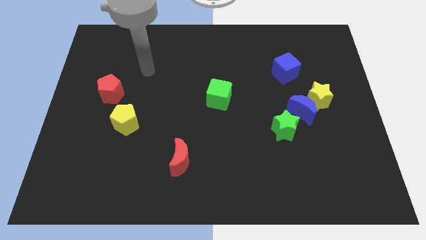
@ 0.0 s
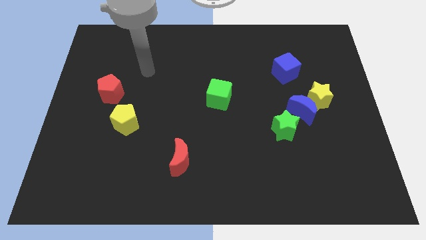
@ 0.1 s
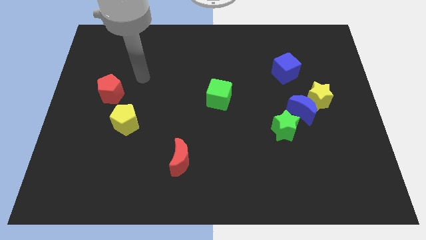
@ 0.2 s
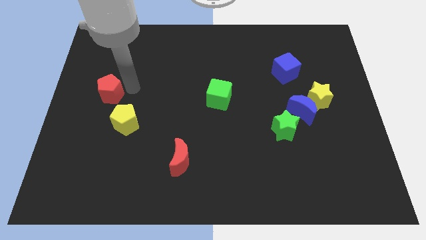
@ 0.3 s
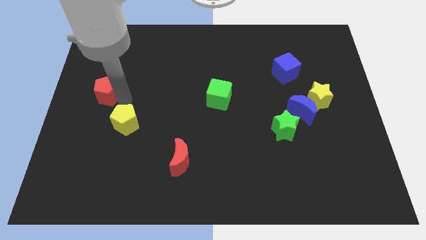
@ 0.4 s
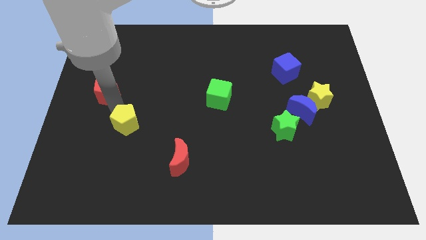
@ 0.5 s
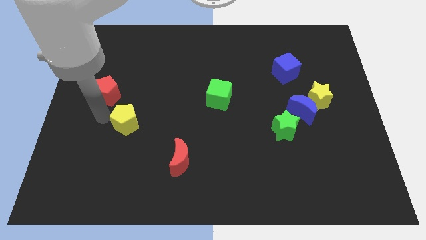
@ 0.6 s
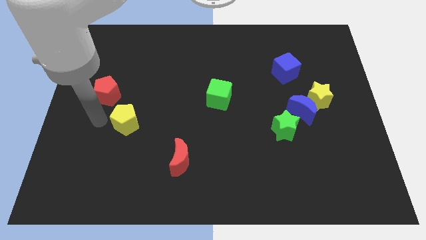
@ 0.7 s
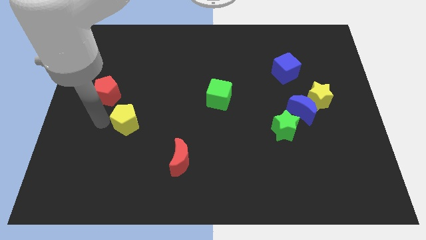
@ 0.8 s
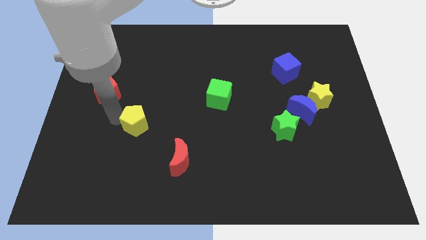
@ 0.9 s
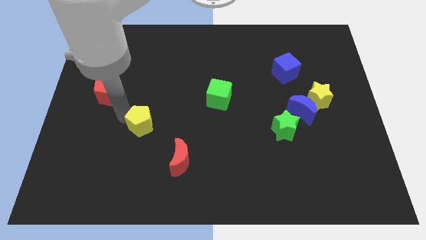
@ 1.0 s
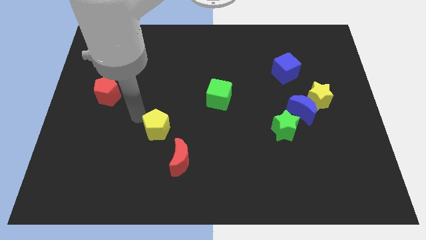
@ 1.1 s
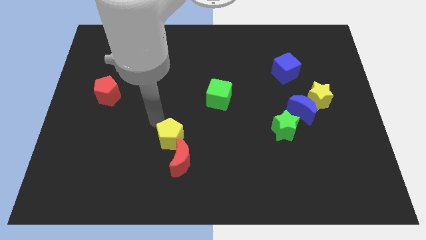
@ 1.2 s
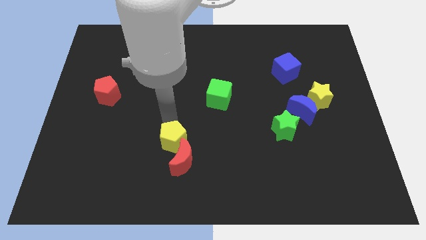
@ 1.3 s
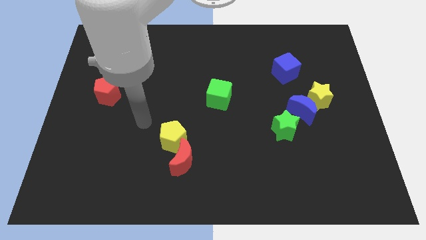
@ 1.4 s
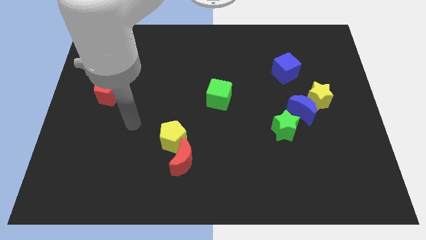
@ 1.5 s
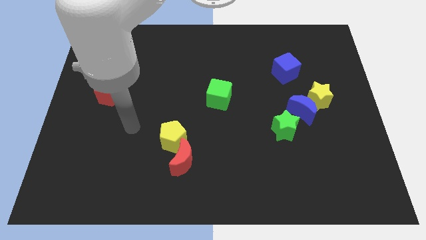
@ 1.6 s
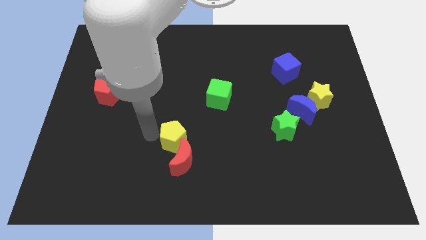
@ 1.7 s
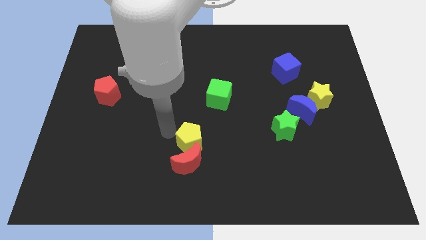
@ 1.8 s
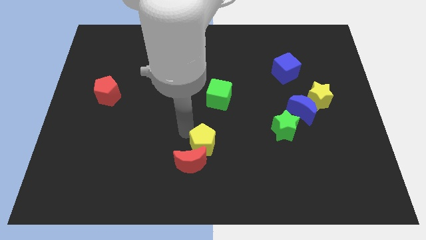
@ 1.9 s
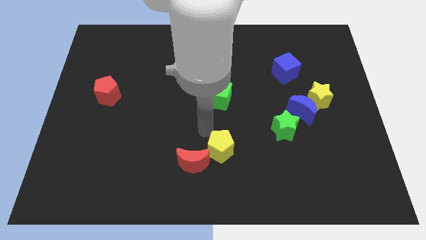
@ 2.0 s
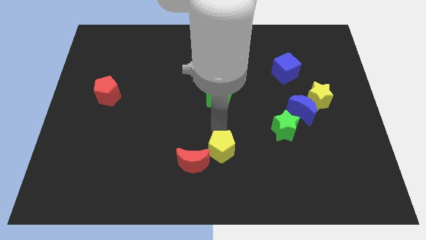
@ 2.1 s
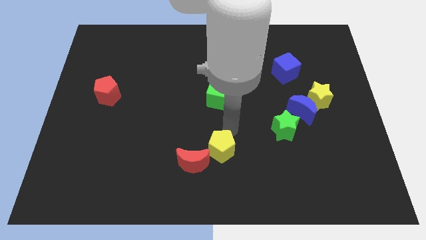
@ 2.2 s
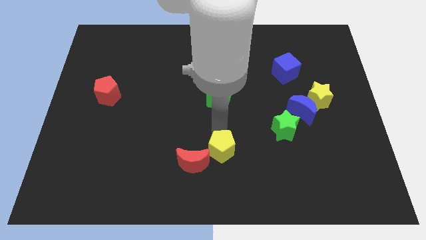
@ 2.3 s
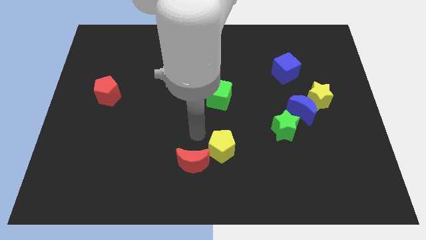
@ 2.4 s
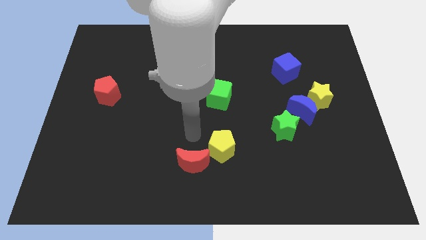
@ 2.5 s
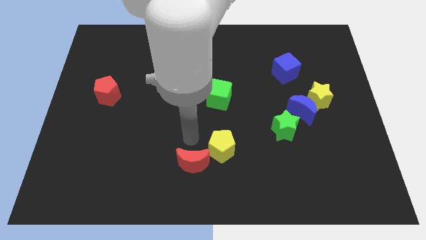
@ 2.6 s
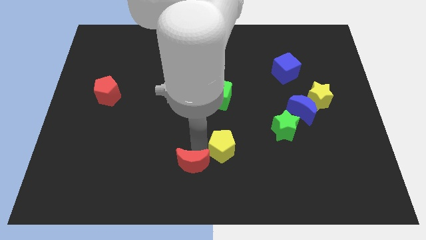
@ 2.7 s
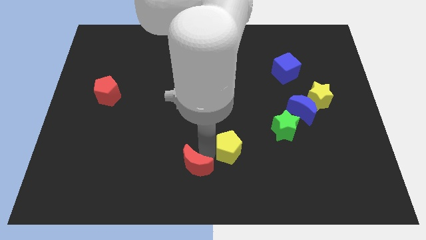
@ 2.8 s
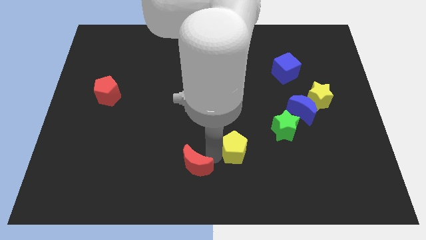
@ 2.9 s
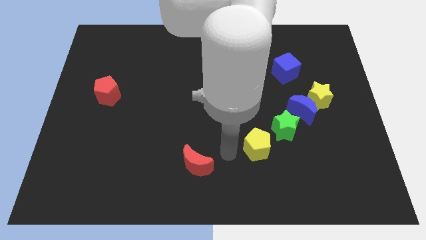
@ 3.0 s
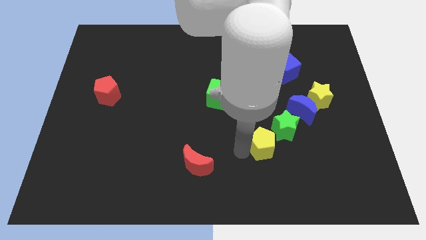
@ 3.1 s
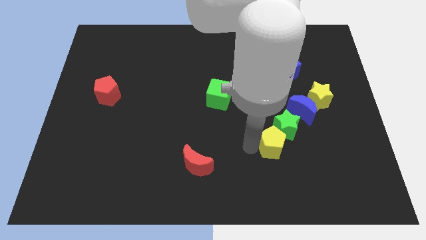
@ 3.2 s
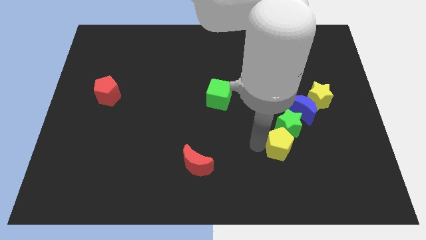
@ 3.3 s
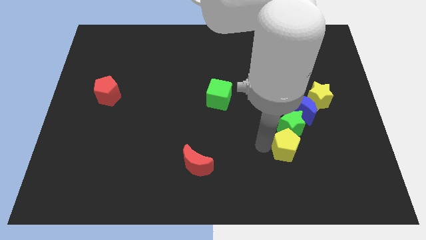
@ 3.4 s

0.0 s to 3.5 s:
put the yellow pentagon to the green star

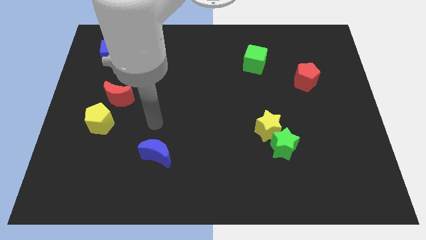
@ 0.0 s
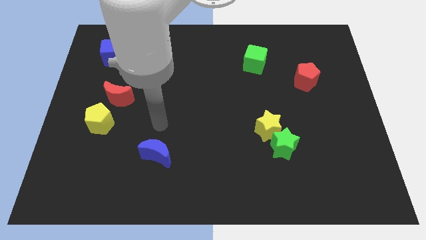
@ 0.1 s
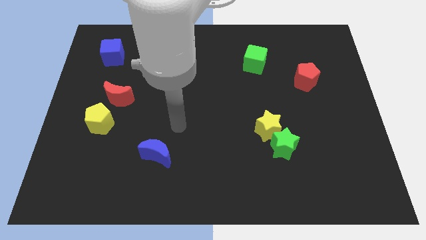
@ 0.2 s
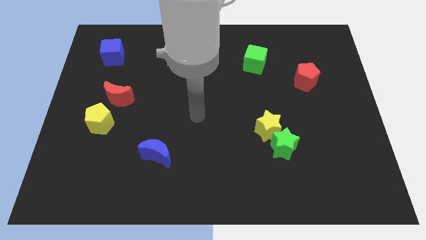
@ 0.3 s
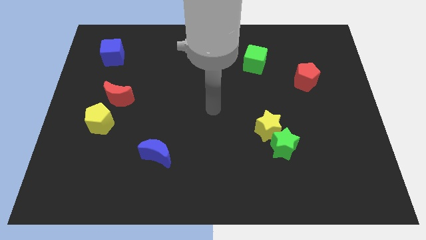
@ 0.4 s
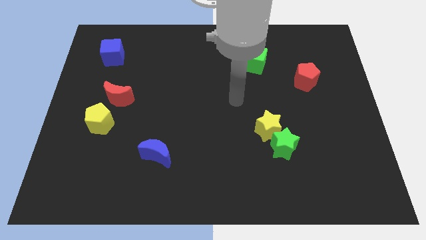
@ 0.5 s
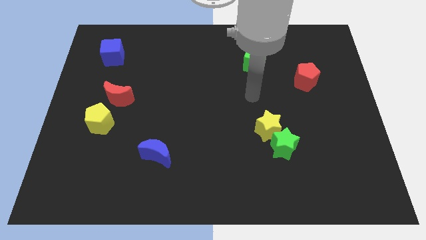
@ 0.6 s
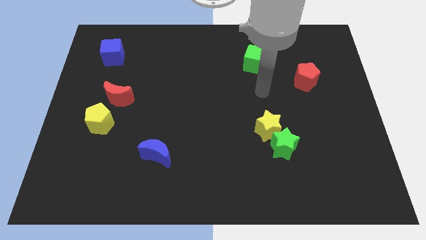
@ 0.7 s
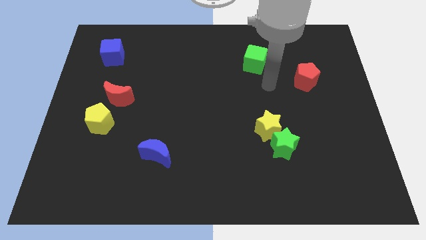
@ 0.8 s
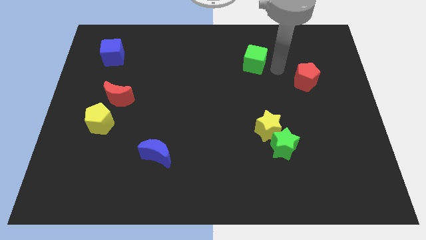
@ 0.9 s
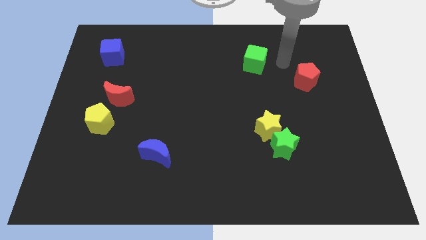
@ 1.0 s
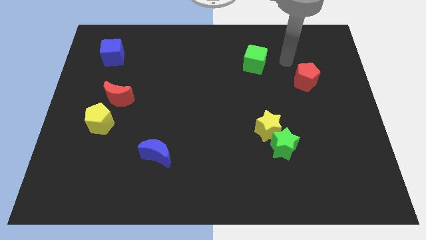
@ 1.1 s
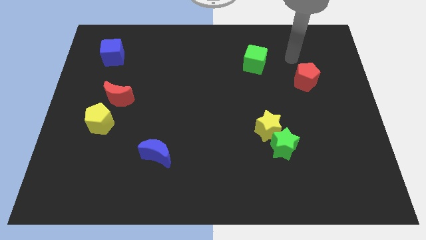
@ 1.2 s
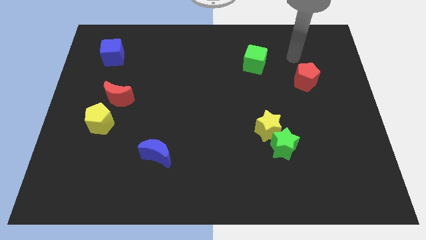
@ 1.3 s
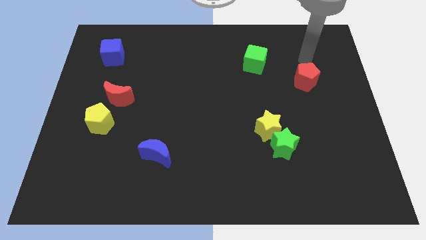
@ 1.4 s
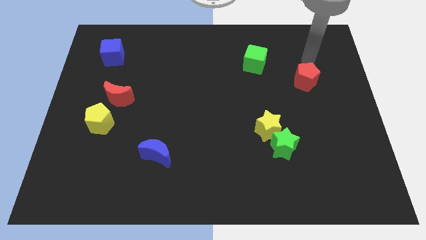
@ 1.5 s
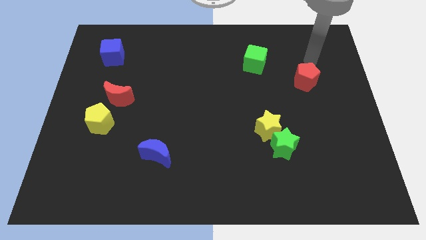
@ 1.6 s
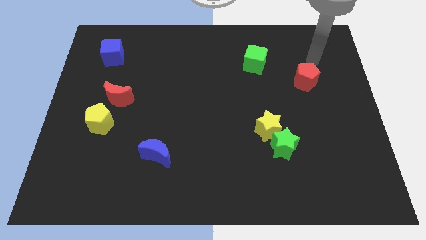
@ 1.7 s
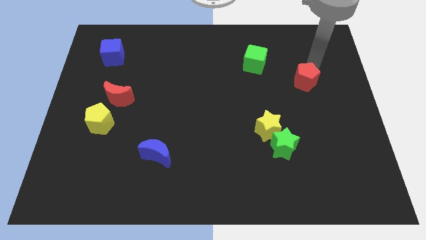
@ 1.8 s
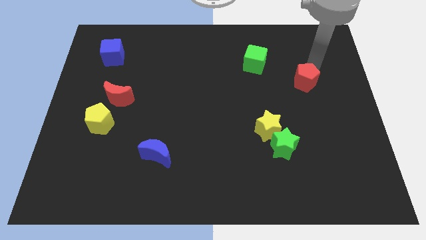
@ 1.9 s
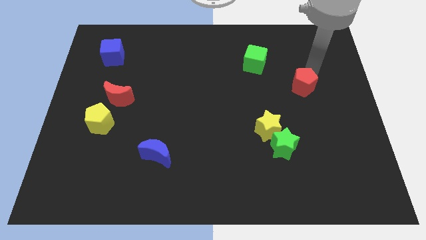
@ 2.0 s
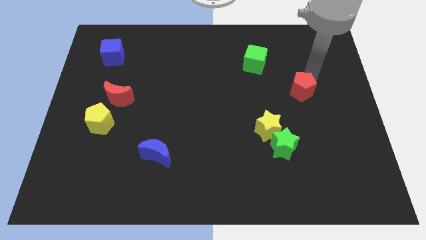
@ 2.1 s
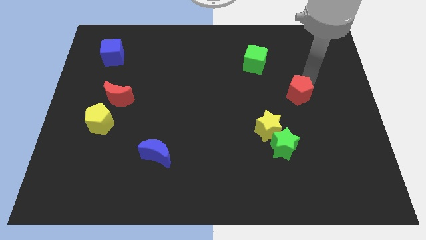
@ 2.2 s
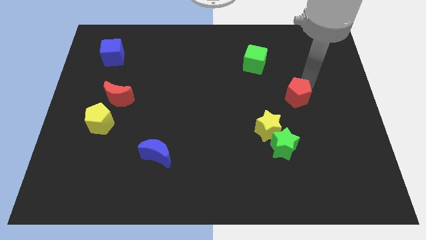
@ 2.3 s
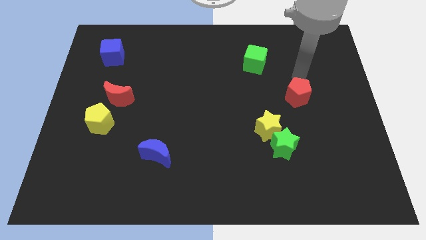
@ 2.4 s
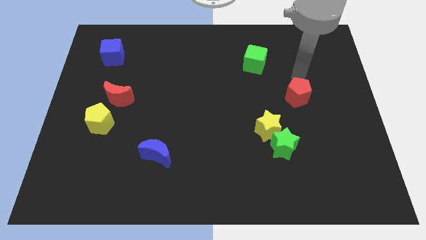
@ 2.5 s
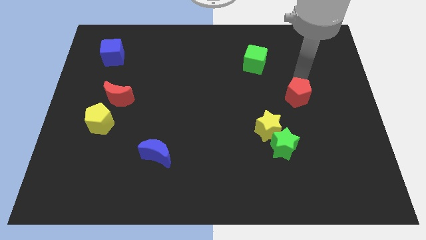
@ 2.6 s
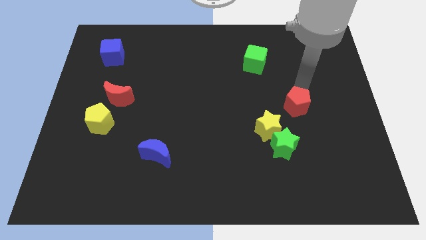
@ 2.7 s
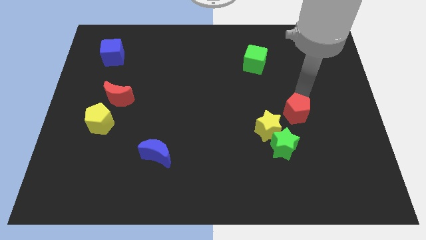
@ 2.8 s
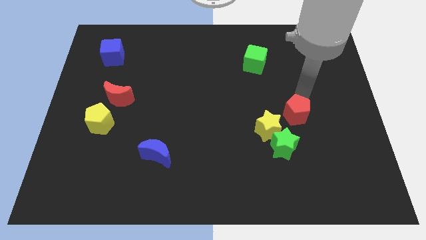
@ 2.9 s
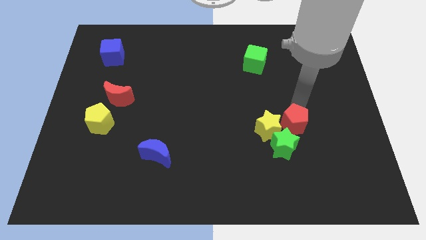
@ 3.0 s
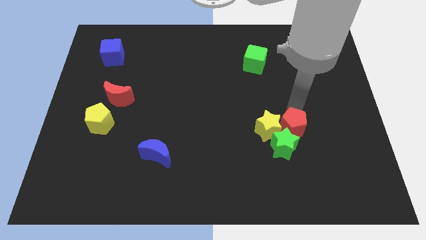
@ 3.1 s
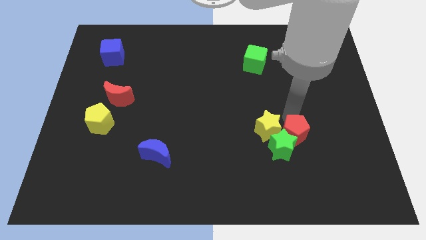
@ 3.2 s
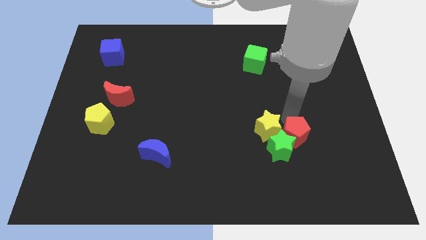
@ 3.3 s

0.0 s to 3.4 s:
move the red pentagon close to the green star

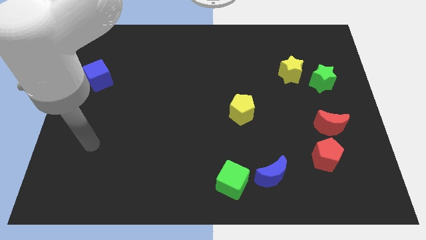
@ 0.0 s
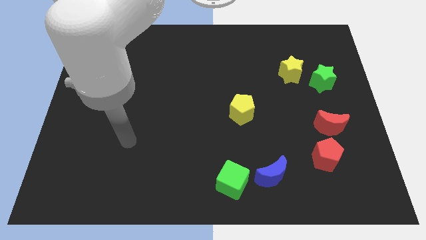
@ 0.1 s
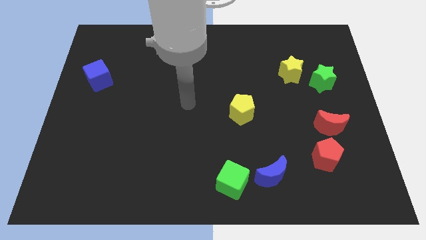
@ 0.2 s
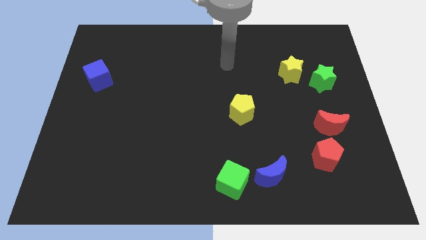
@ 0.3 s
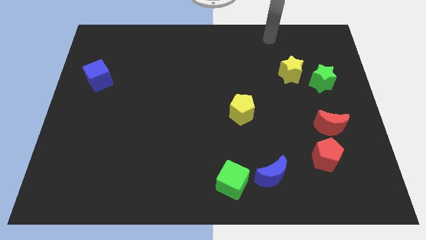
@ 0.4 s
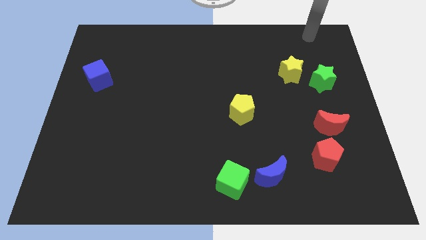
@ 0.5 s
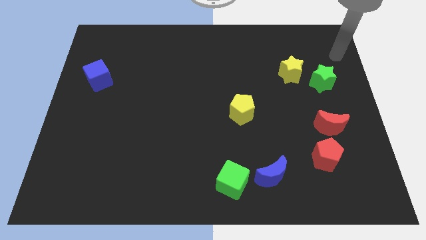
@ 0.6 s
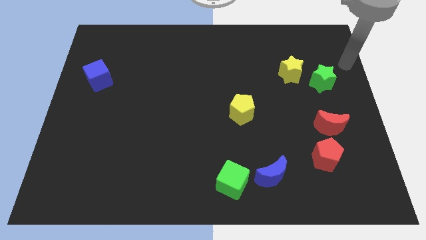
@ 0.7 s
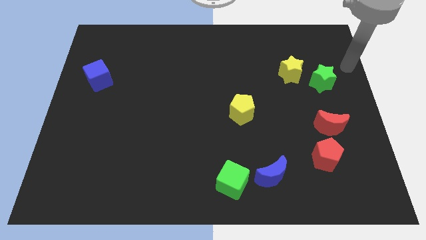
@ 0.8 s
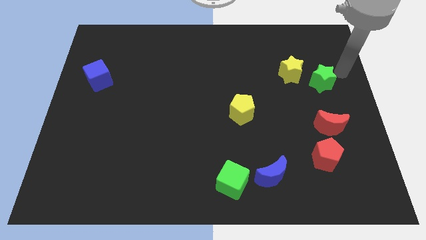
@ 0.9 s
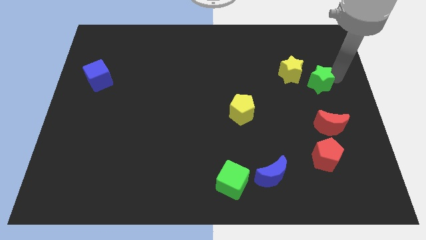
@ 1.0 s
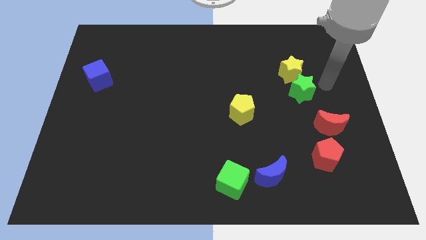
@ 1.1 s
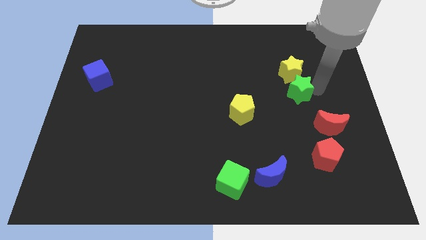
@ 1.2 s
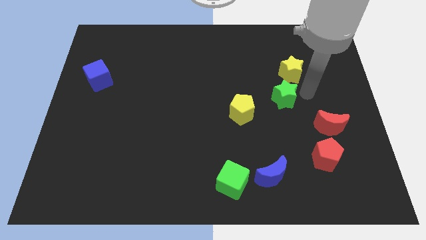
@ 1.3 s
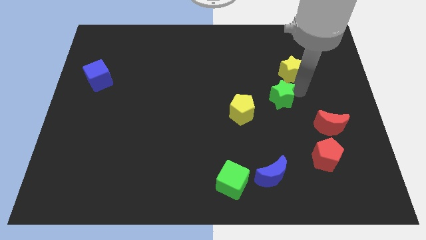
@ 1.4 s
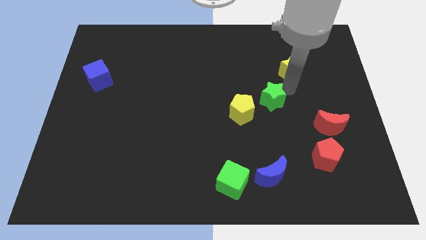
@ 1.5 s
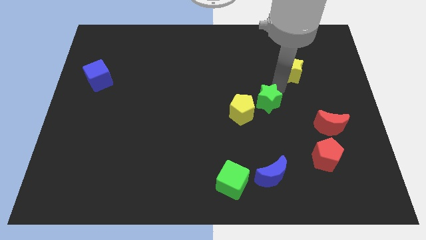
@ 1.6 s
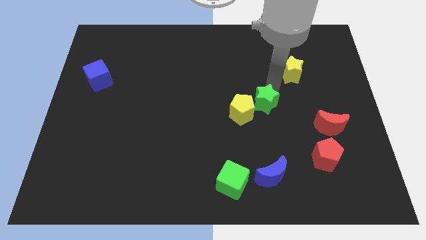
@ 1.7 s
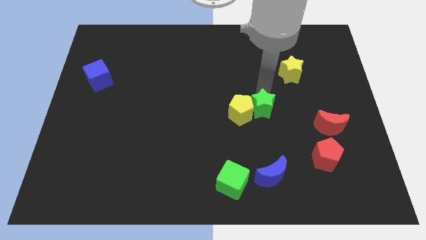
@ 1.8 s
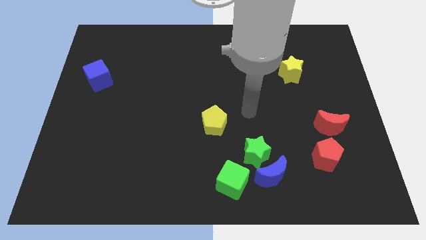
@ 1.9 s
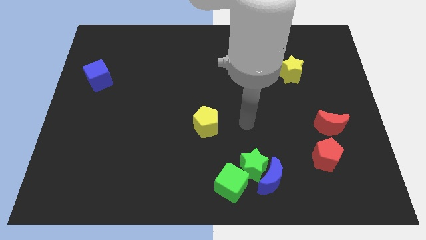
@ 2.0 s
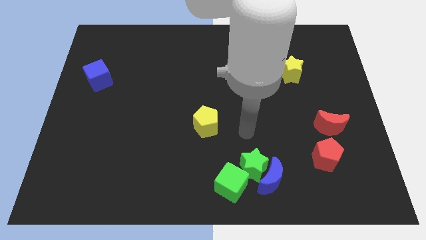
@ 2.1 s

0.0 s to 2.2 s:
put the green star towards the blue moon
